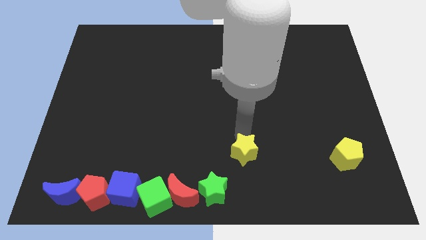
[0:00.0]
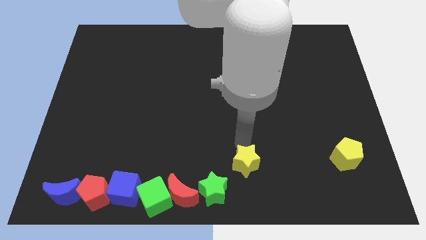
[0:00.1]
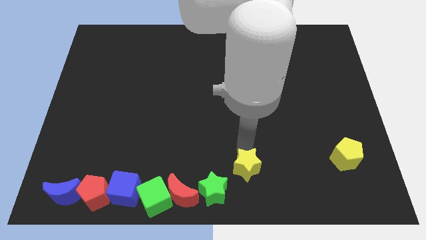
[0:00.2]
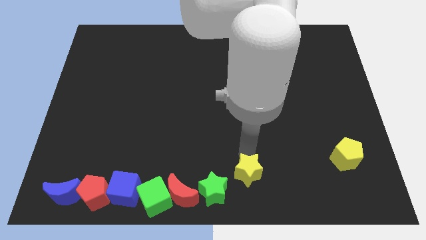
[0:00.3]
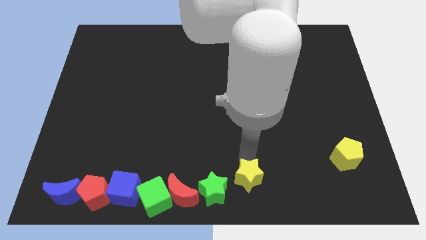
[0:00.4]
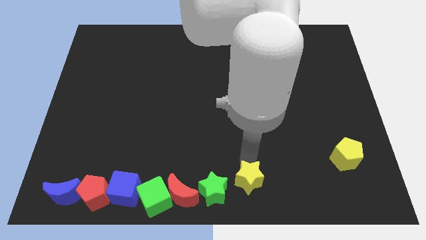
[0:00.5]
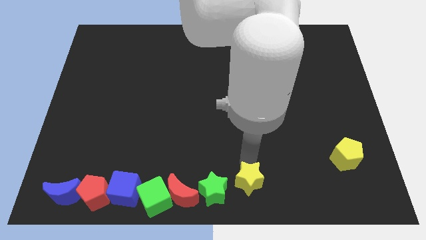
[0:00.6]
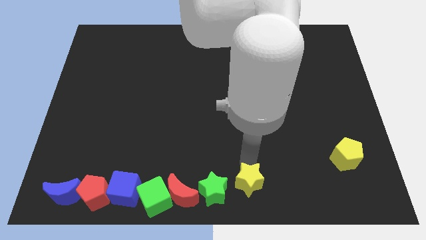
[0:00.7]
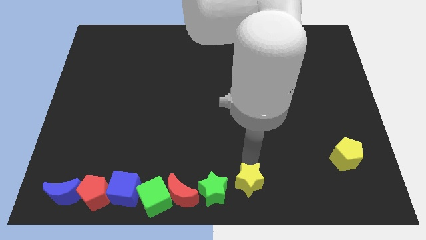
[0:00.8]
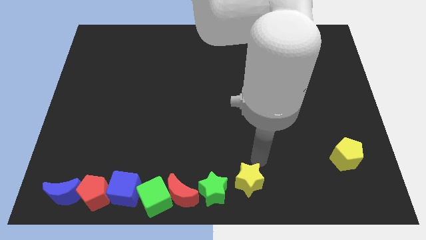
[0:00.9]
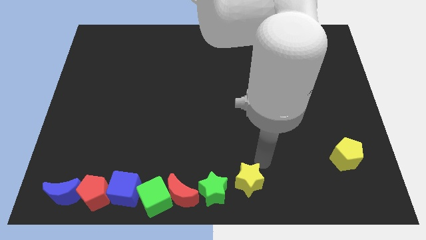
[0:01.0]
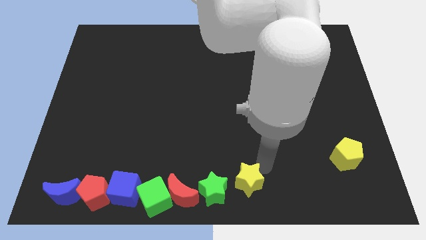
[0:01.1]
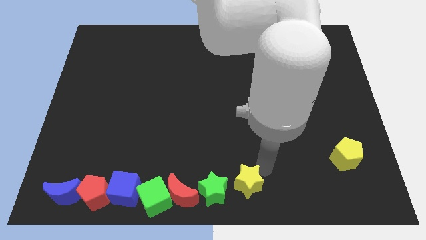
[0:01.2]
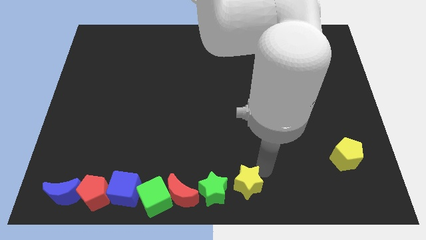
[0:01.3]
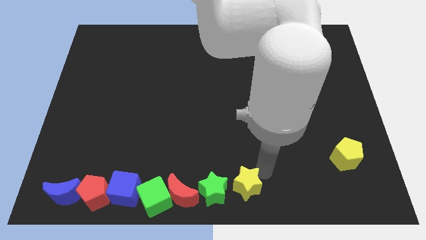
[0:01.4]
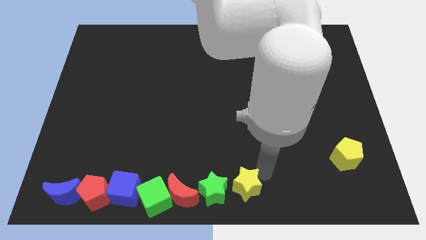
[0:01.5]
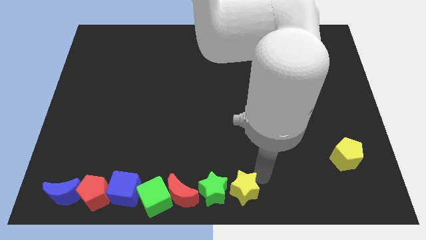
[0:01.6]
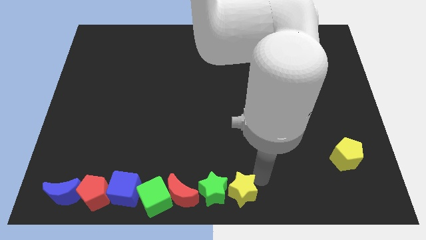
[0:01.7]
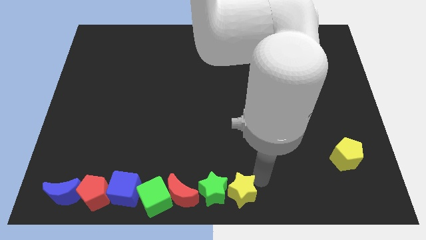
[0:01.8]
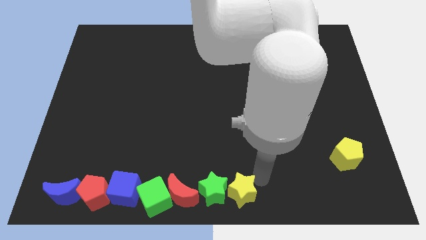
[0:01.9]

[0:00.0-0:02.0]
move the yellow star to the right of the green star

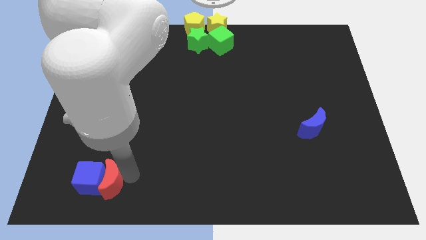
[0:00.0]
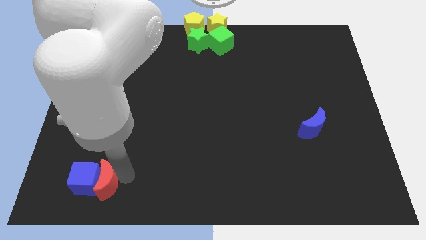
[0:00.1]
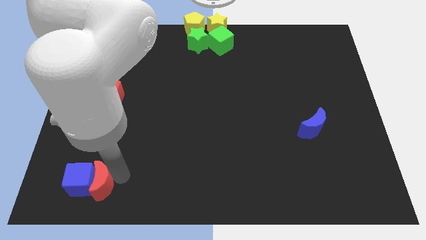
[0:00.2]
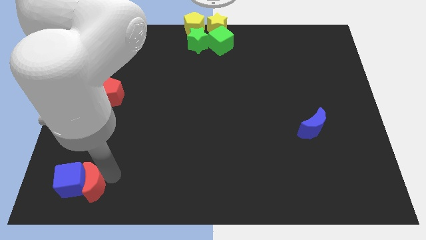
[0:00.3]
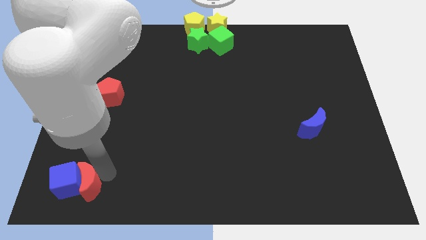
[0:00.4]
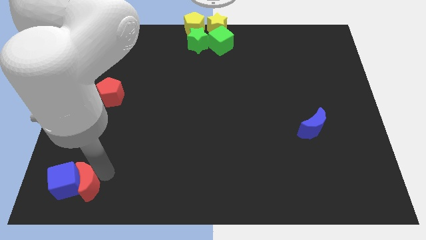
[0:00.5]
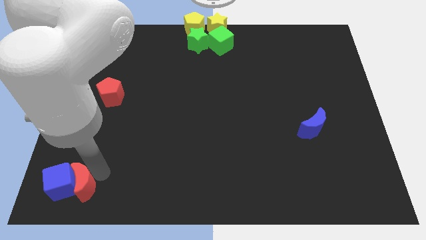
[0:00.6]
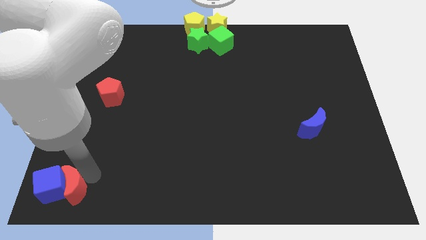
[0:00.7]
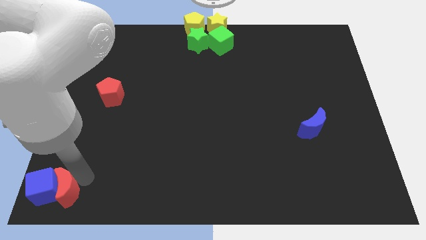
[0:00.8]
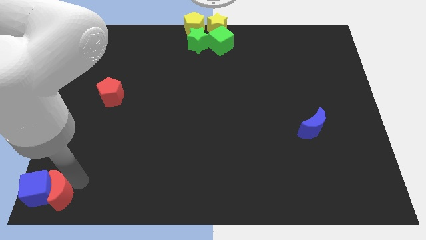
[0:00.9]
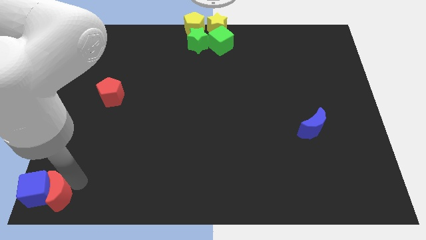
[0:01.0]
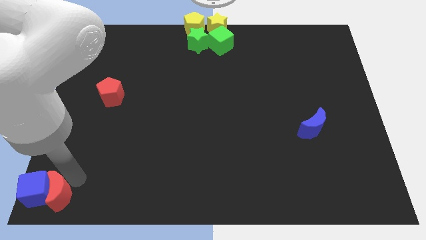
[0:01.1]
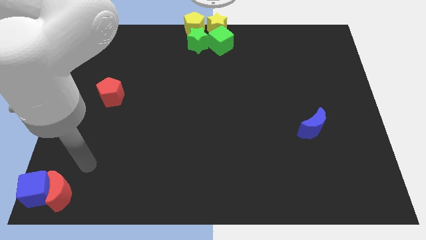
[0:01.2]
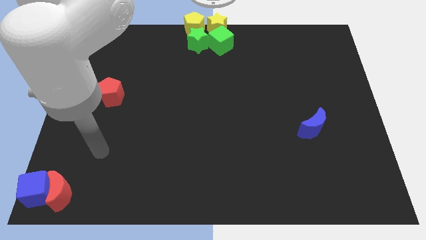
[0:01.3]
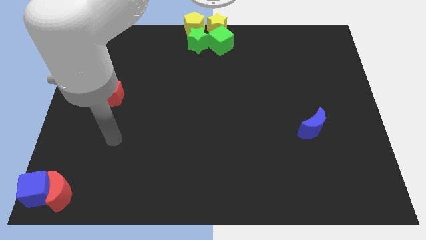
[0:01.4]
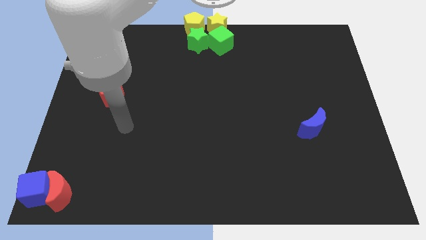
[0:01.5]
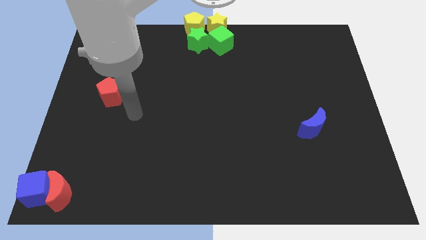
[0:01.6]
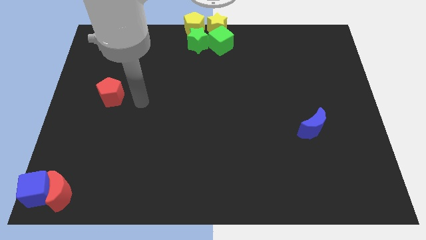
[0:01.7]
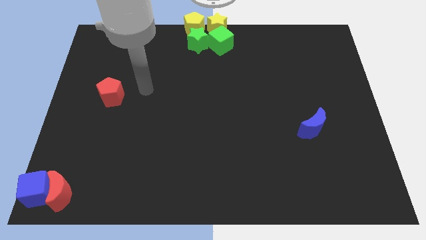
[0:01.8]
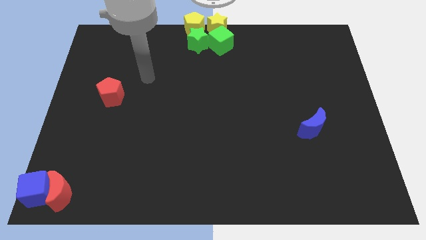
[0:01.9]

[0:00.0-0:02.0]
push the red crescent towards the bottom left corner of the board

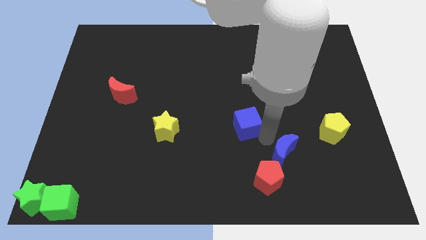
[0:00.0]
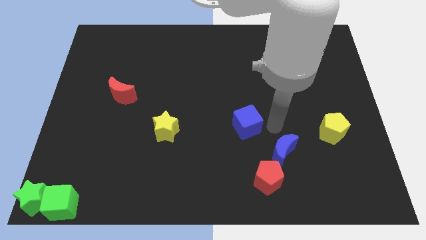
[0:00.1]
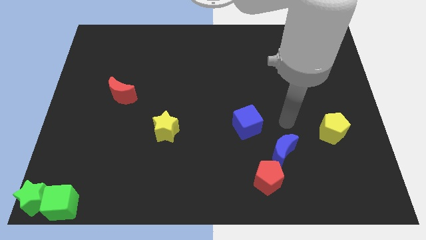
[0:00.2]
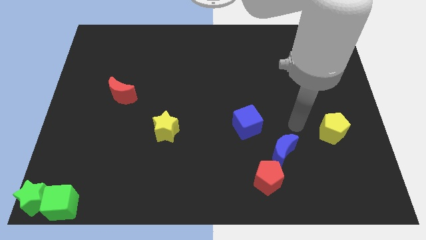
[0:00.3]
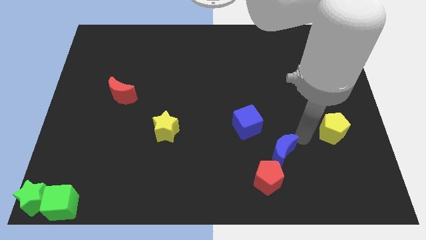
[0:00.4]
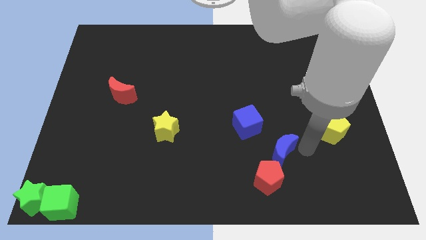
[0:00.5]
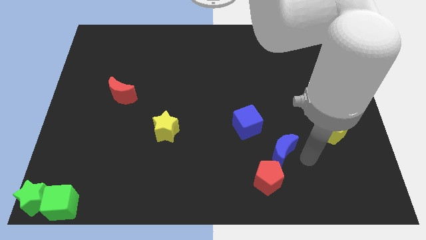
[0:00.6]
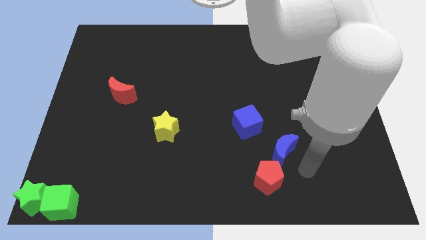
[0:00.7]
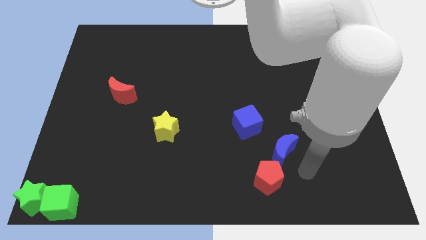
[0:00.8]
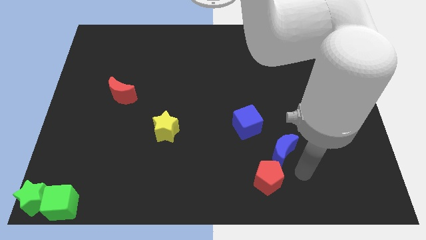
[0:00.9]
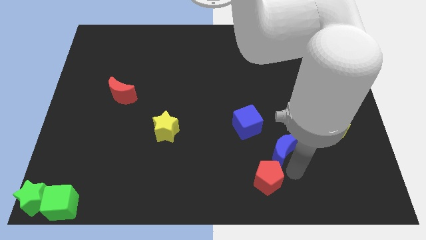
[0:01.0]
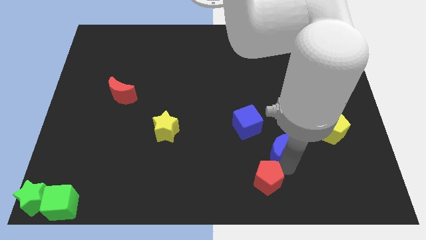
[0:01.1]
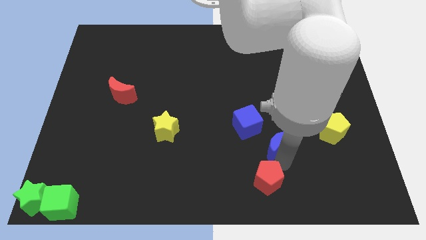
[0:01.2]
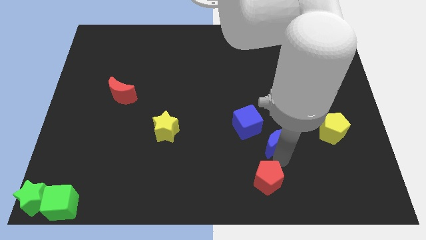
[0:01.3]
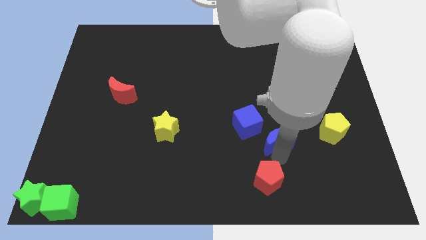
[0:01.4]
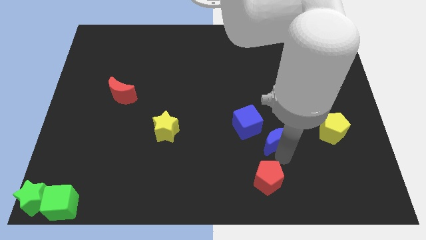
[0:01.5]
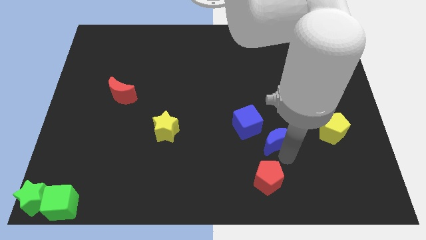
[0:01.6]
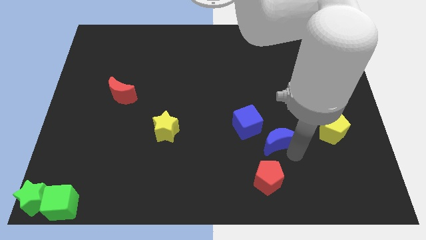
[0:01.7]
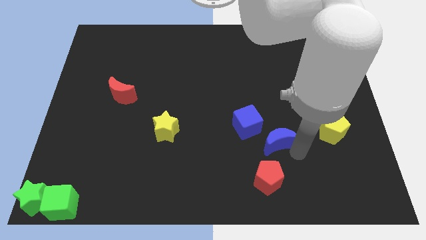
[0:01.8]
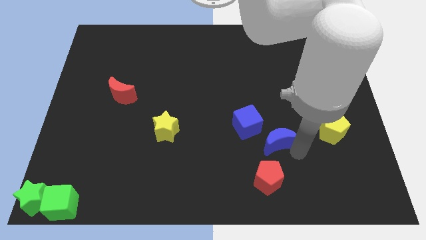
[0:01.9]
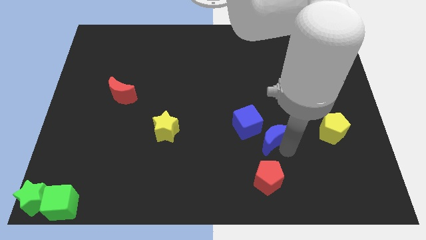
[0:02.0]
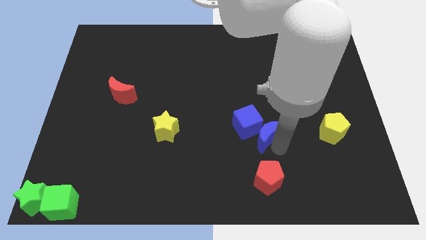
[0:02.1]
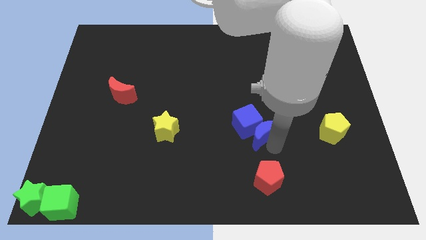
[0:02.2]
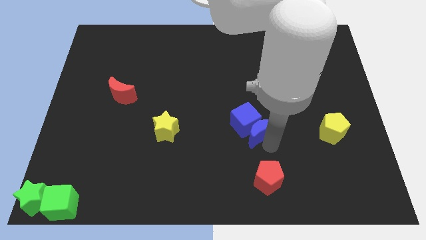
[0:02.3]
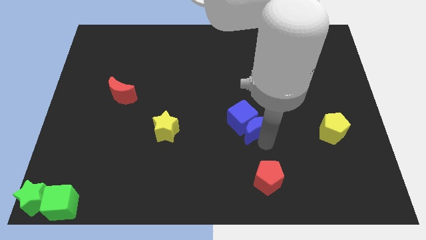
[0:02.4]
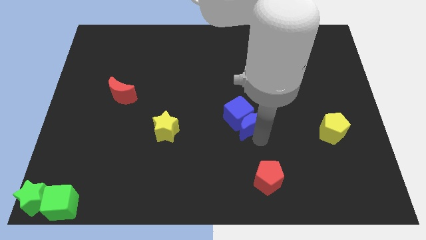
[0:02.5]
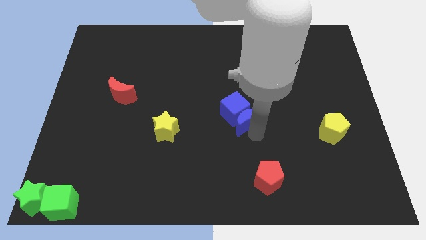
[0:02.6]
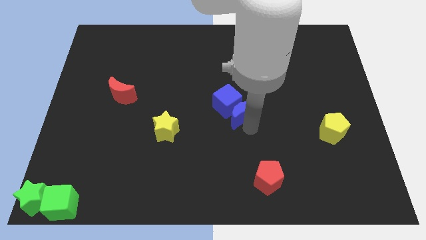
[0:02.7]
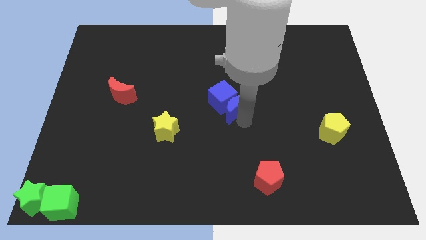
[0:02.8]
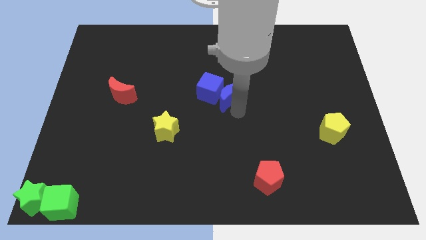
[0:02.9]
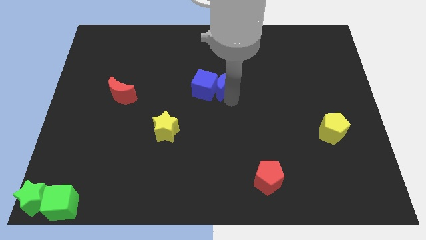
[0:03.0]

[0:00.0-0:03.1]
push blue blocks at center

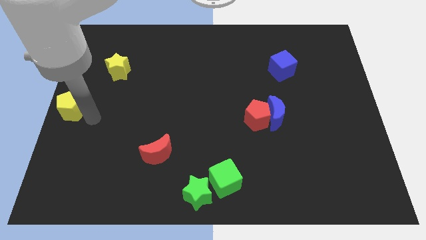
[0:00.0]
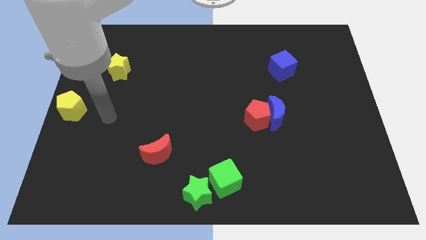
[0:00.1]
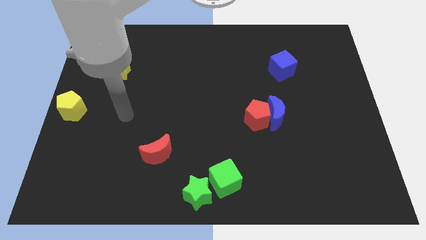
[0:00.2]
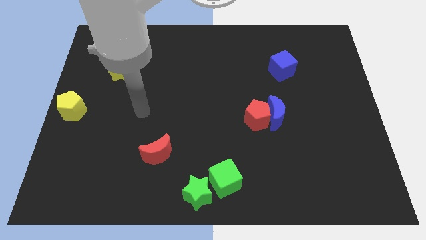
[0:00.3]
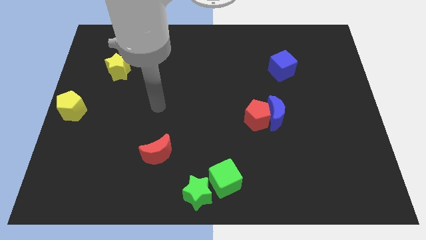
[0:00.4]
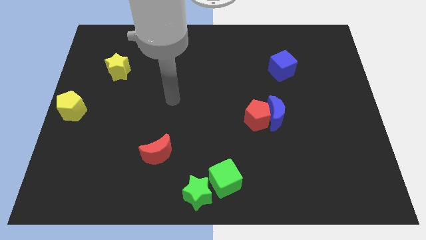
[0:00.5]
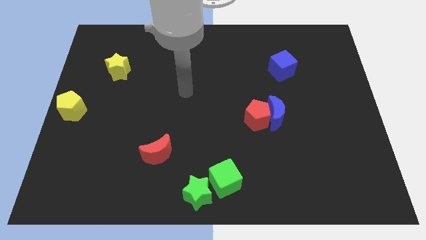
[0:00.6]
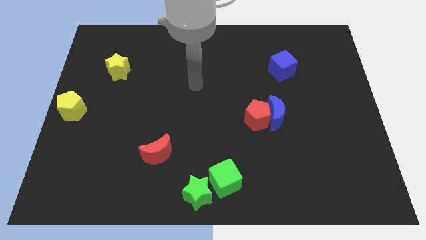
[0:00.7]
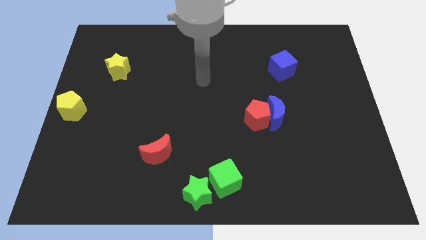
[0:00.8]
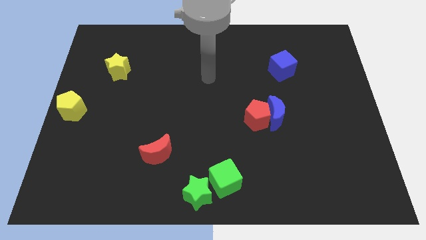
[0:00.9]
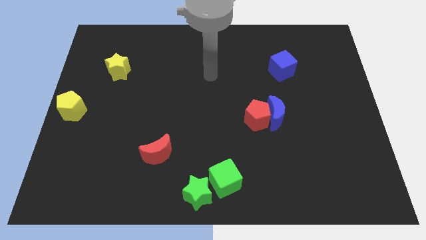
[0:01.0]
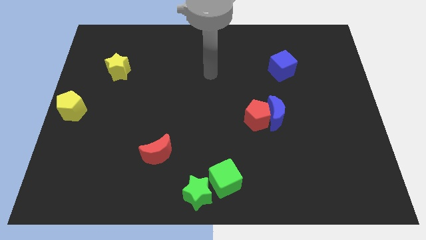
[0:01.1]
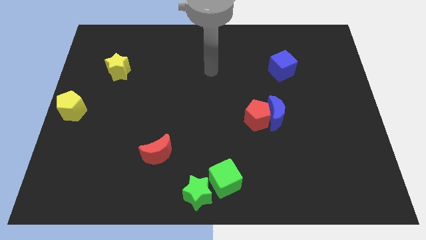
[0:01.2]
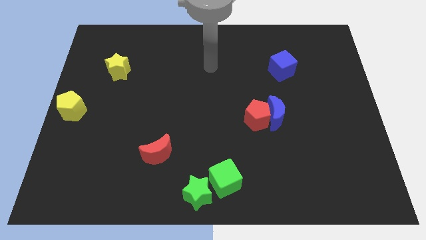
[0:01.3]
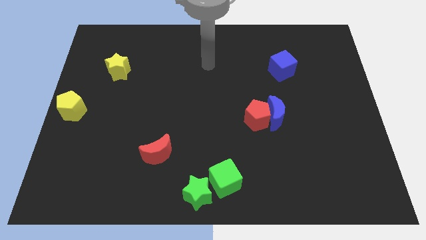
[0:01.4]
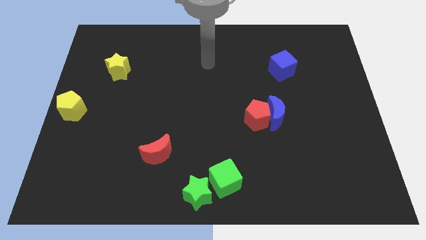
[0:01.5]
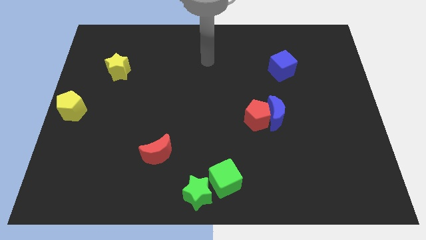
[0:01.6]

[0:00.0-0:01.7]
move your arm away from the yellow pentagon

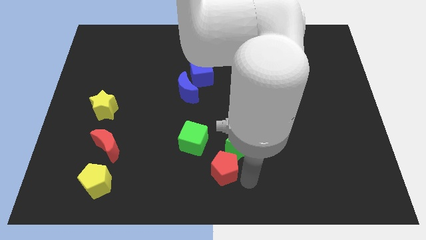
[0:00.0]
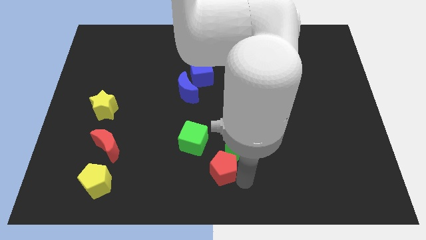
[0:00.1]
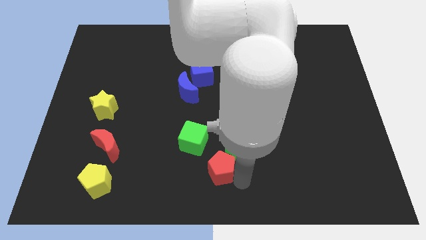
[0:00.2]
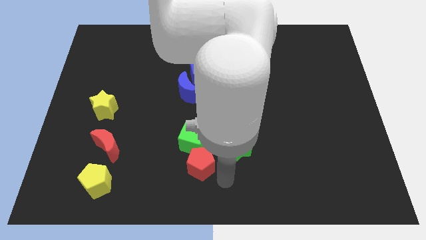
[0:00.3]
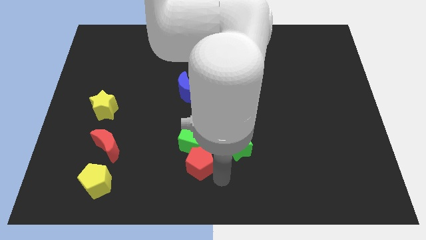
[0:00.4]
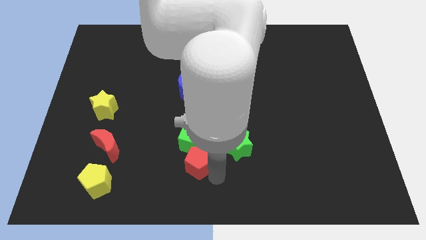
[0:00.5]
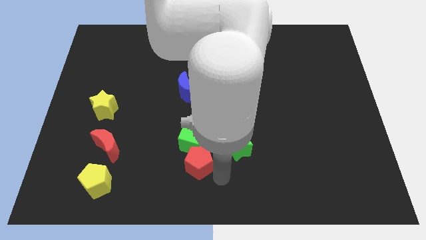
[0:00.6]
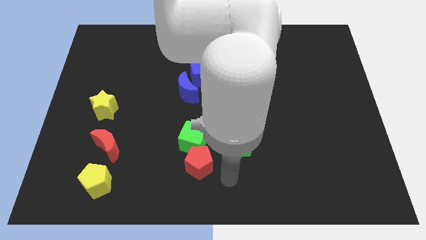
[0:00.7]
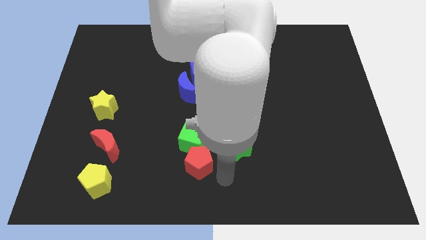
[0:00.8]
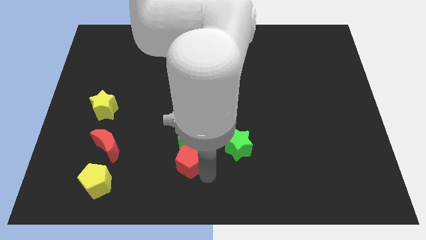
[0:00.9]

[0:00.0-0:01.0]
place red pentagon below green cube
